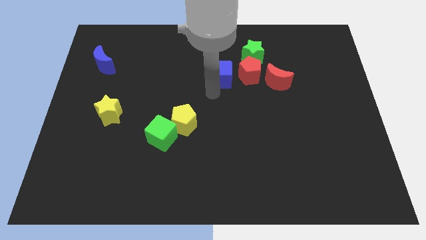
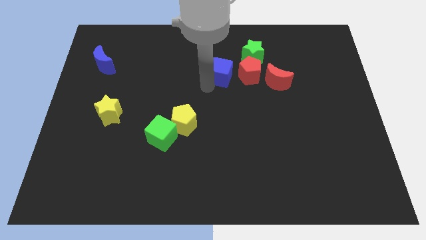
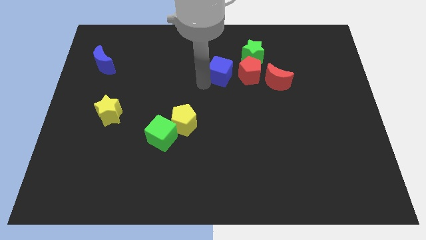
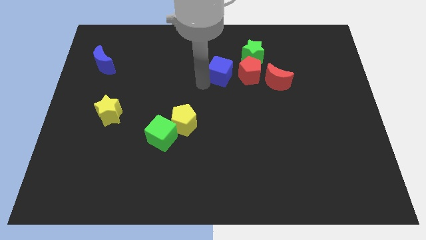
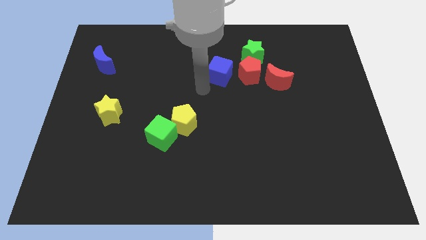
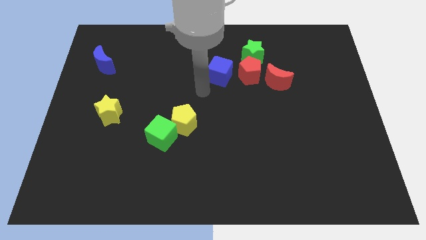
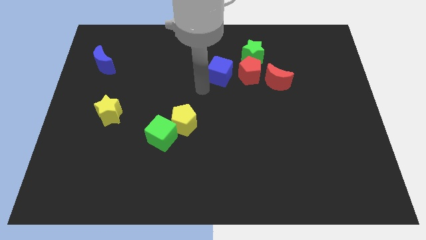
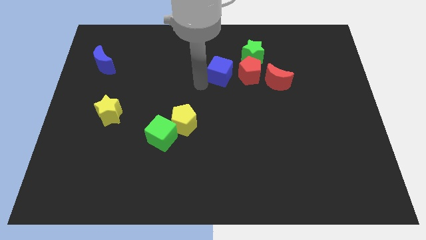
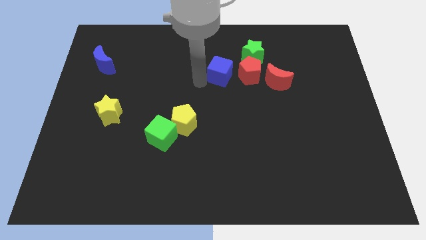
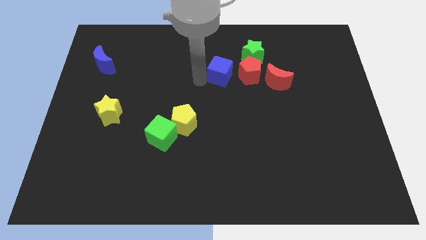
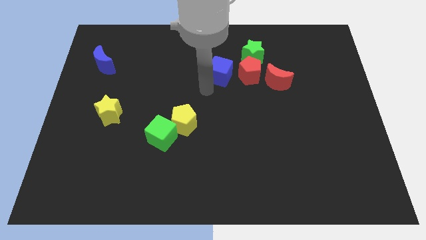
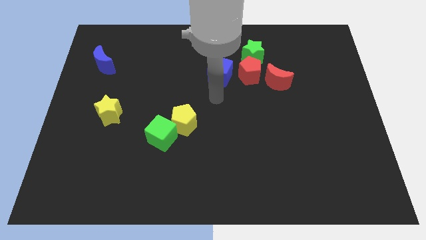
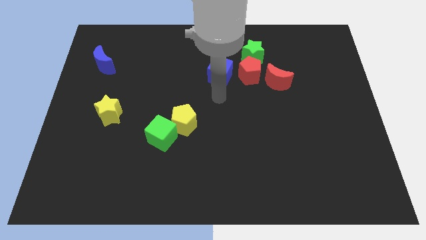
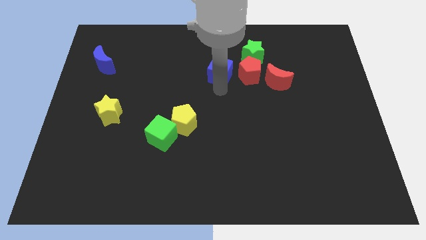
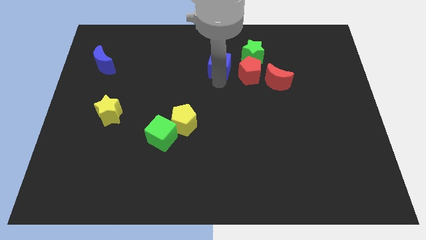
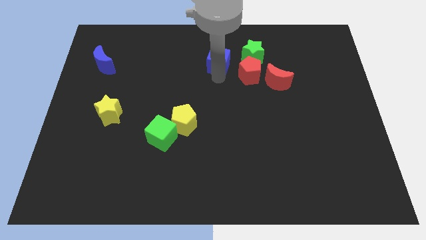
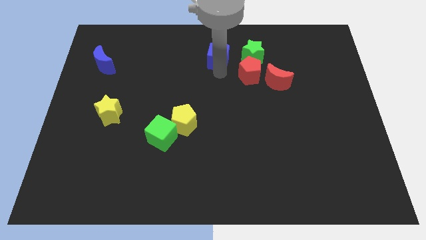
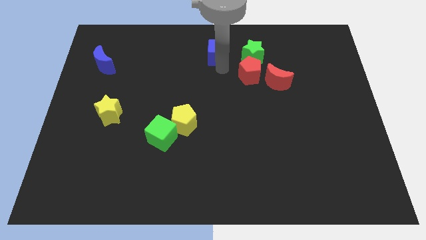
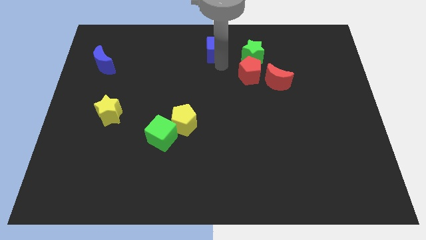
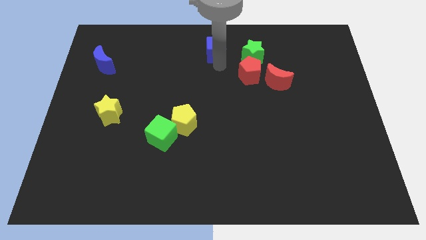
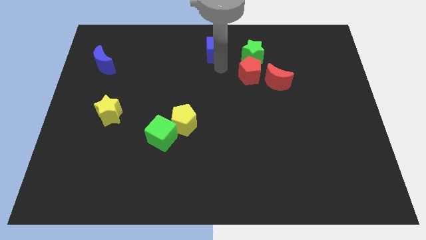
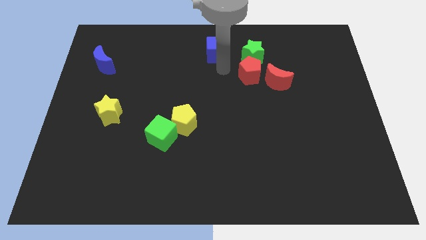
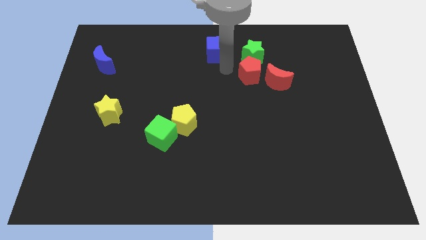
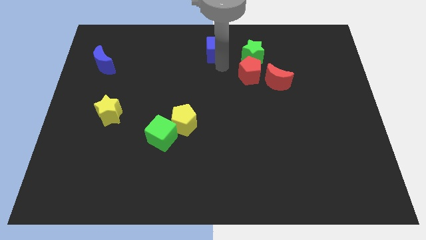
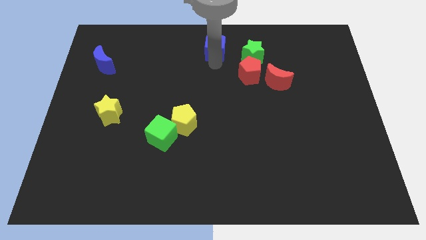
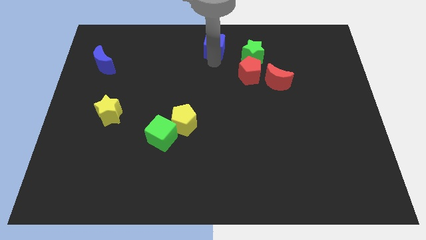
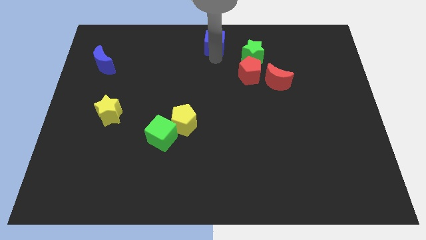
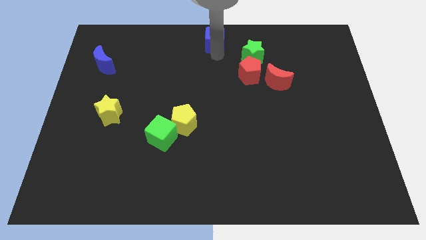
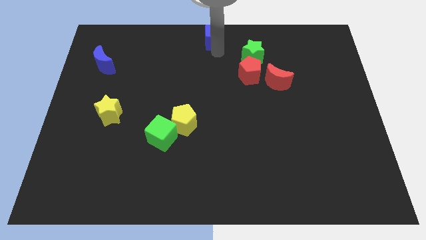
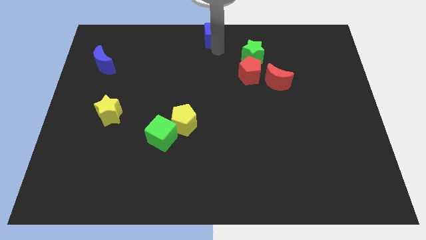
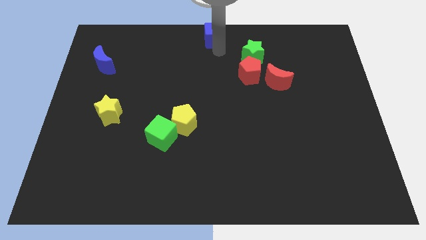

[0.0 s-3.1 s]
place the blue cube at the top center of the board

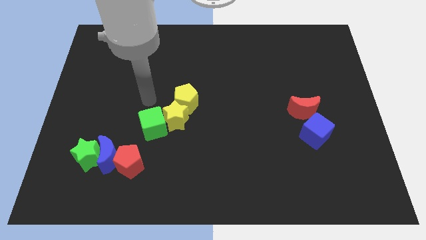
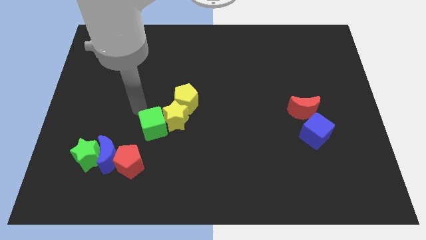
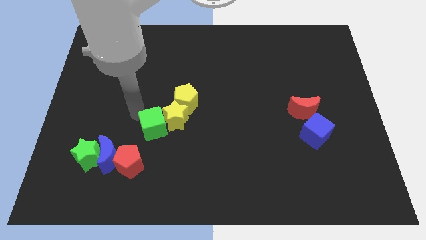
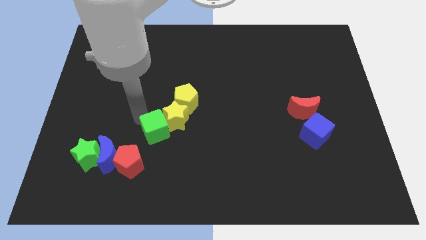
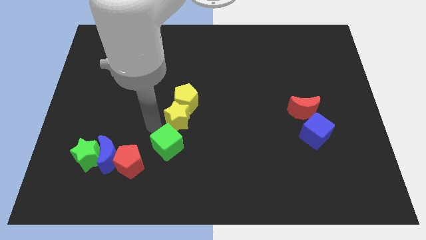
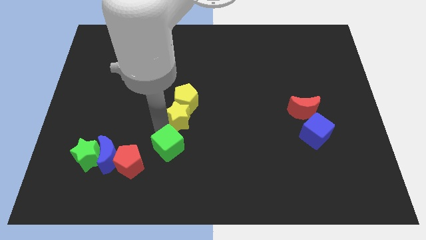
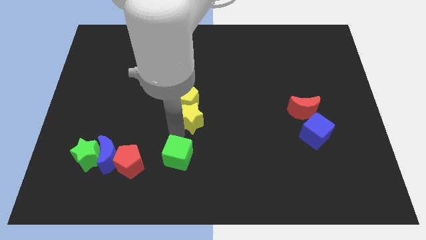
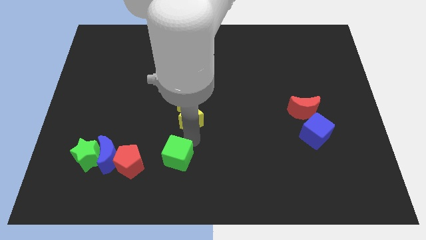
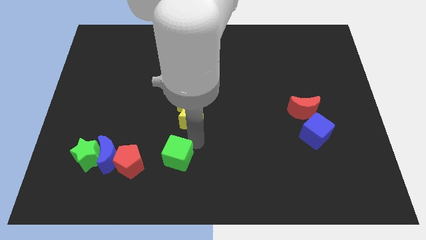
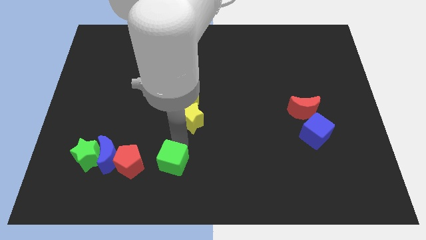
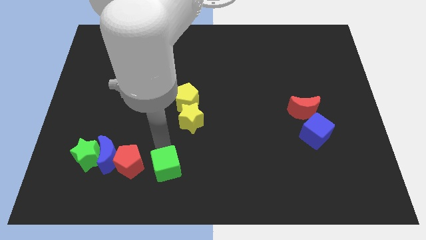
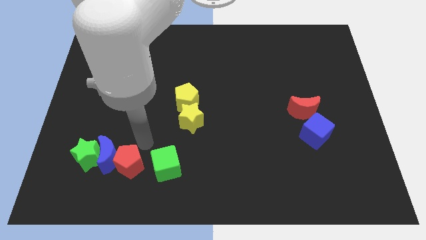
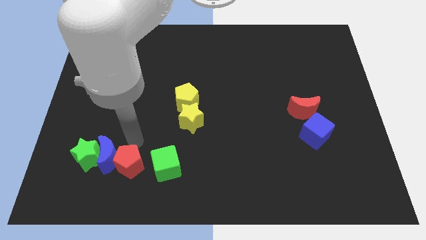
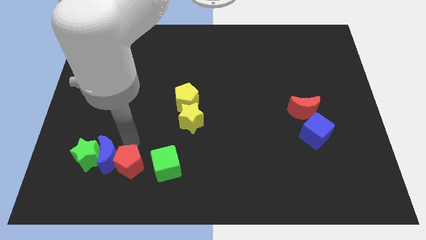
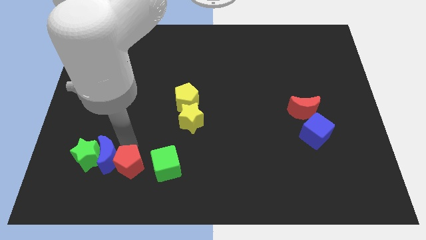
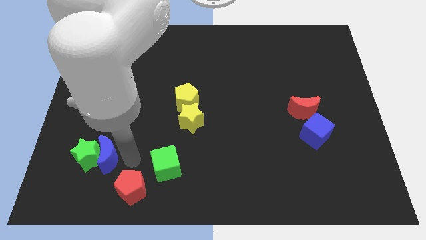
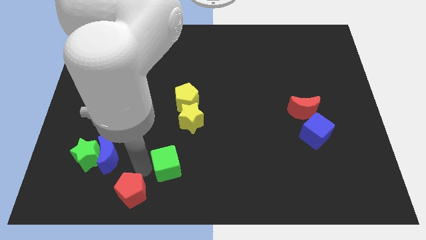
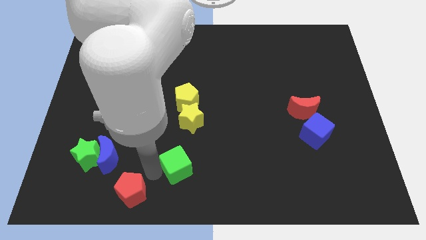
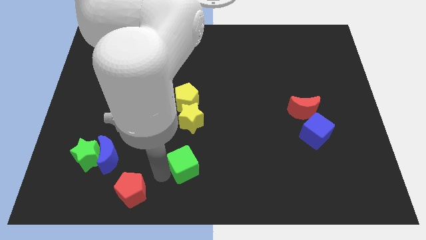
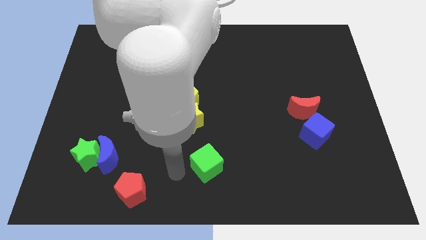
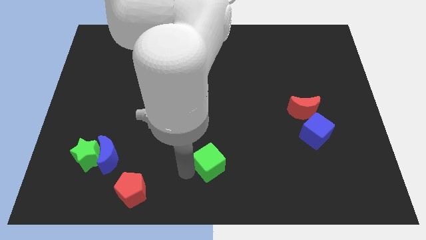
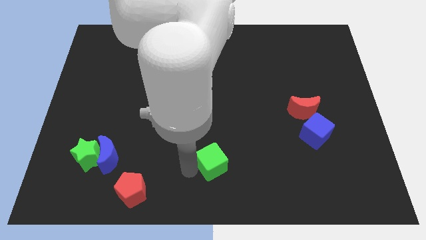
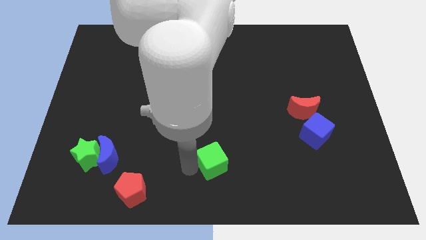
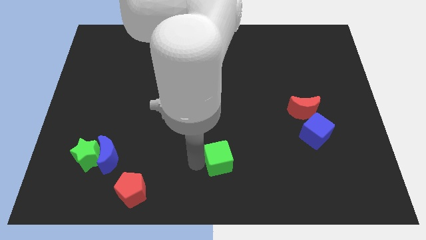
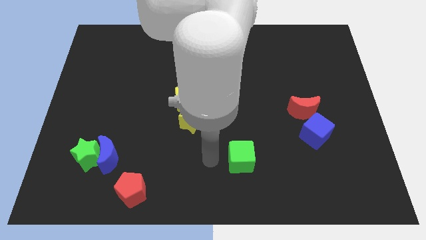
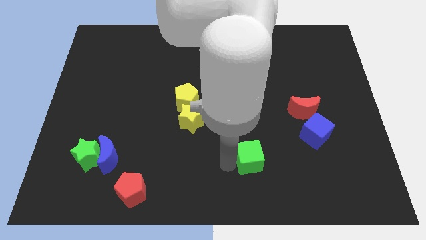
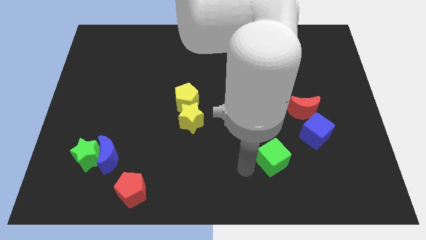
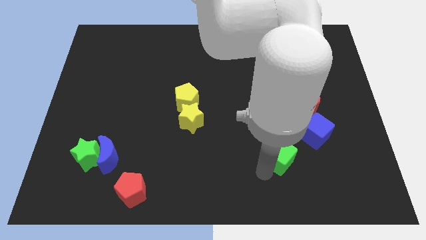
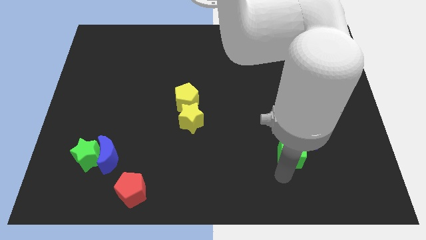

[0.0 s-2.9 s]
push the green cube to the bottom left of the red crescent

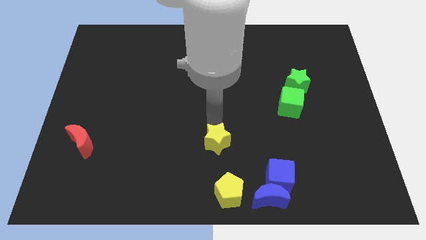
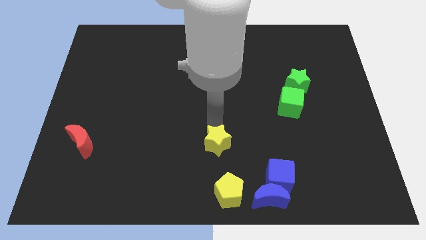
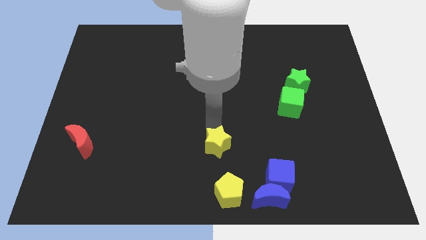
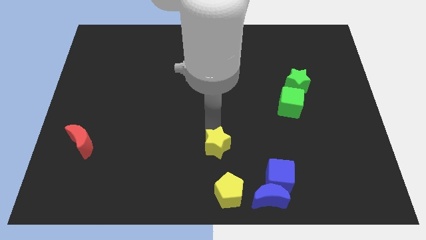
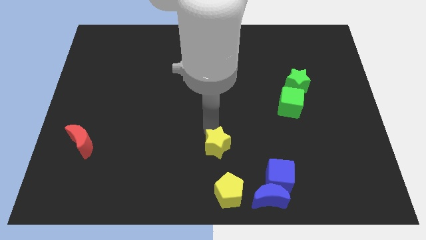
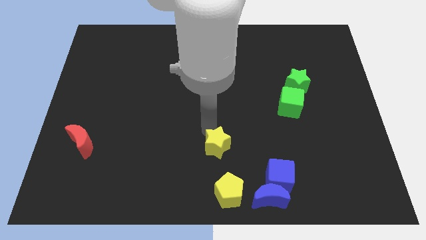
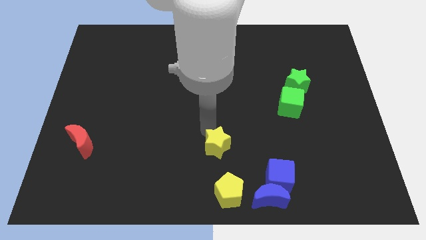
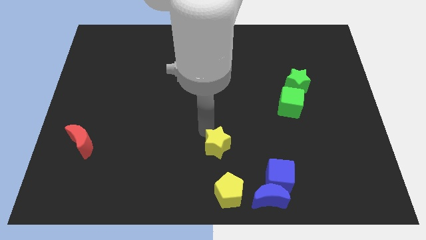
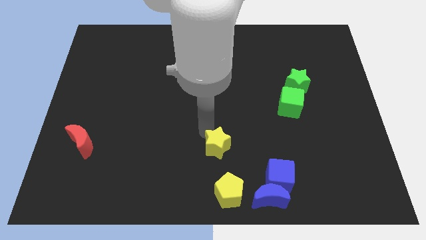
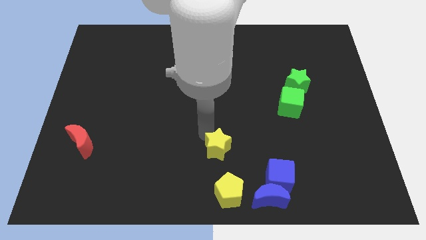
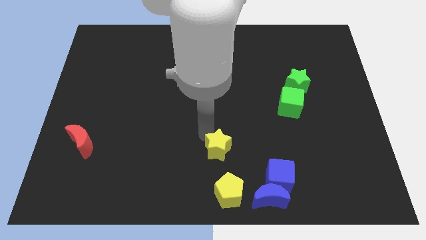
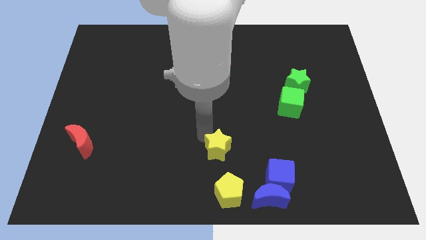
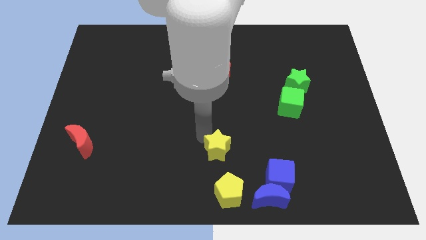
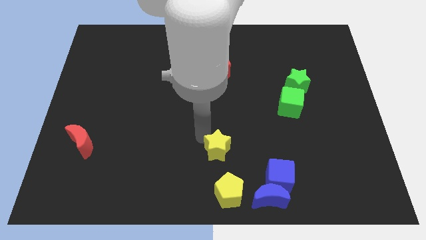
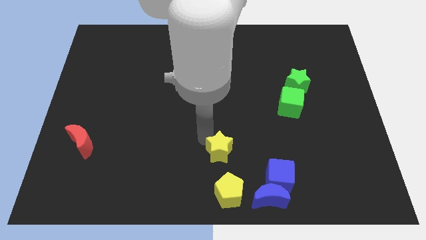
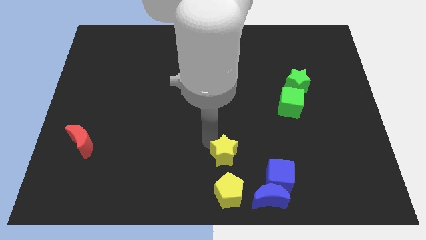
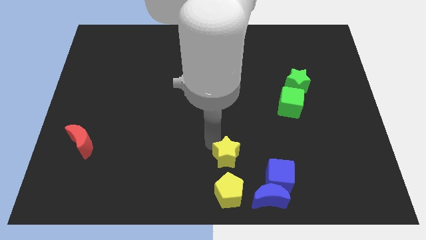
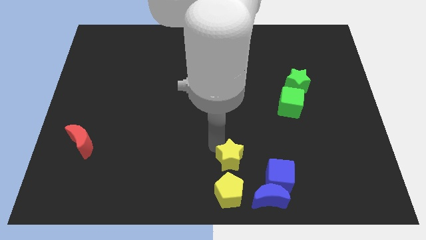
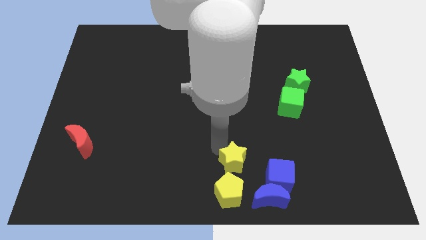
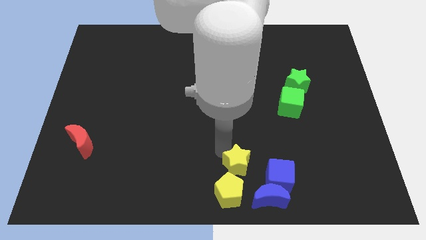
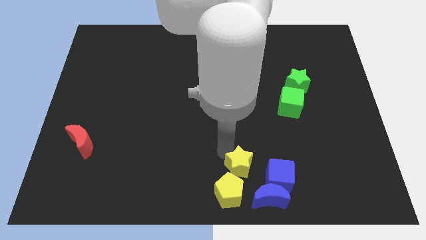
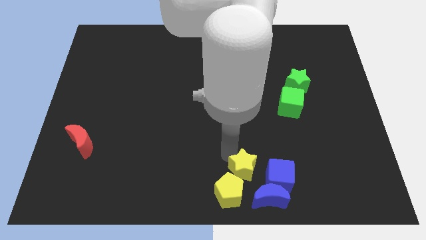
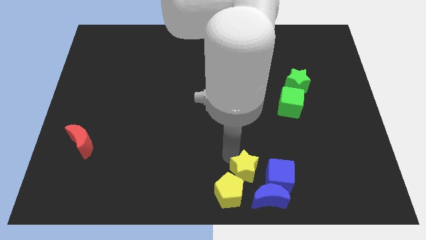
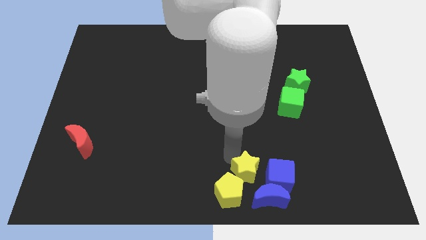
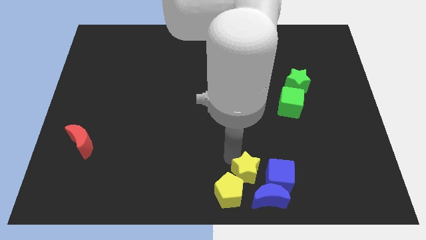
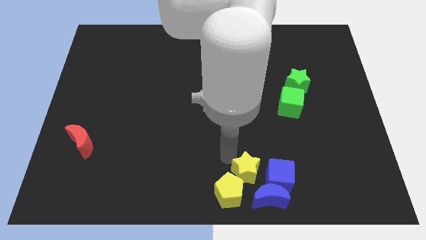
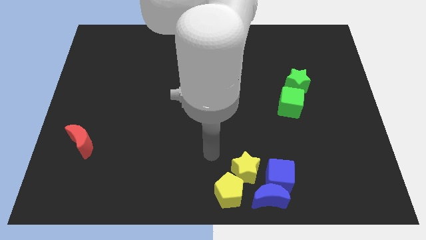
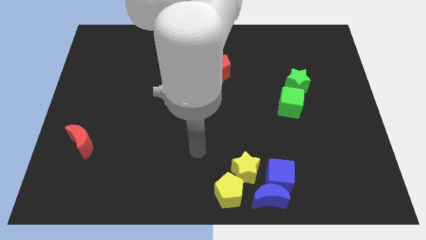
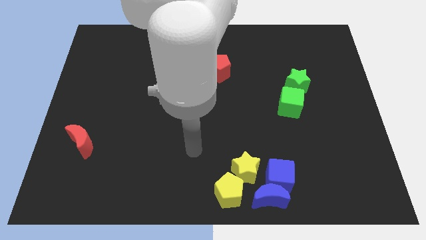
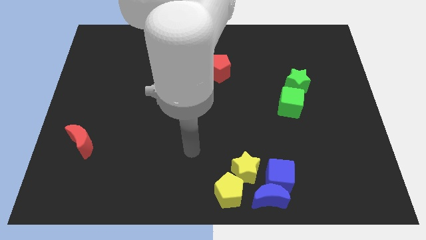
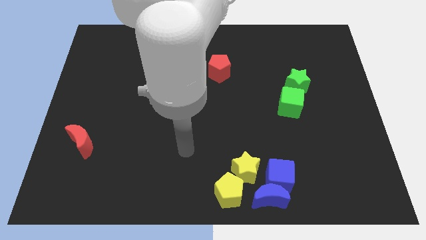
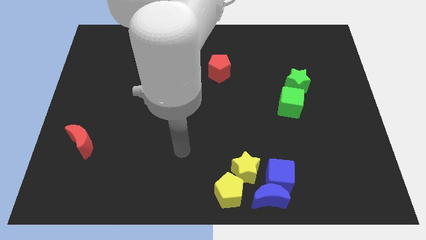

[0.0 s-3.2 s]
put the yellow star on the left side of the blue cube
